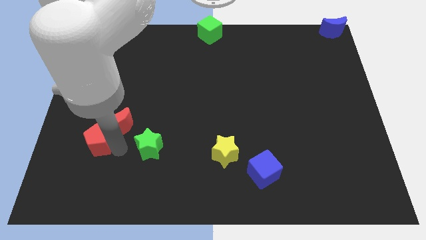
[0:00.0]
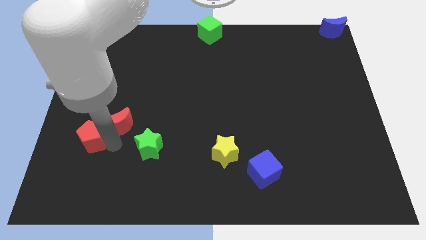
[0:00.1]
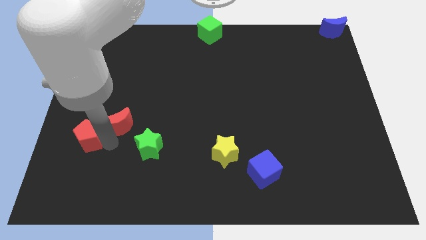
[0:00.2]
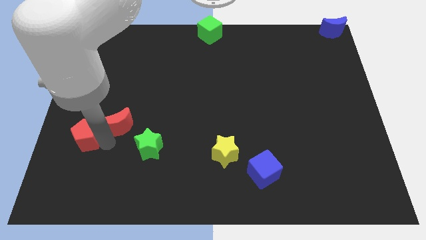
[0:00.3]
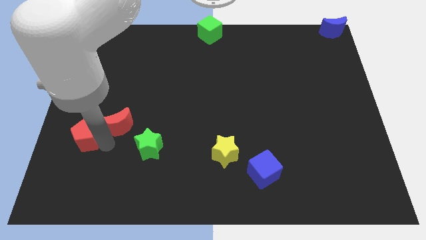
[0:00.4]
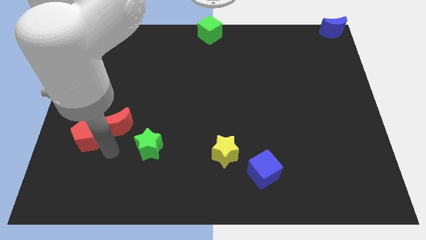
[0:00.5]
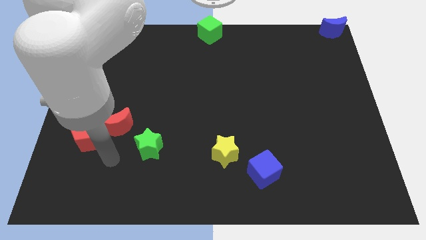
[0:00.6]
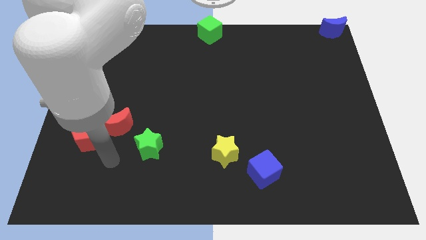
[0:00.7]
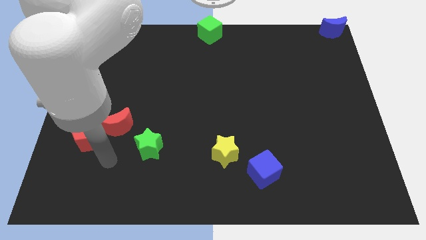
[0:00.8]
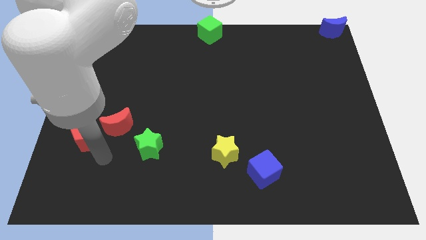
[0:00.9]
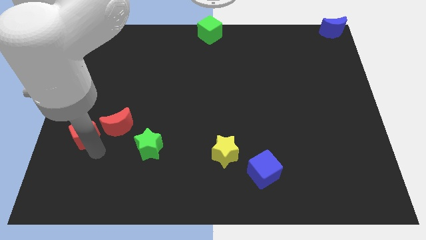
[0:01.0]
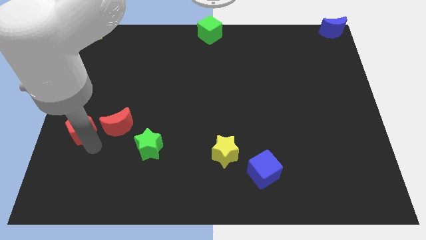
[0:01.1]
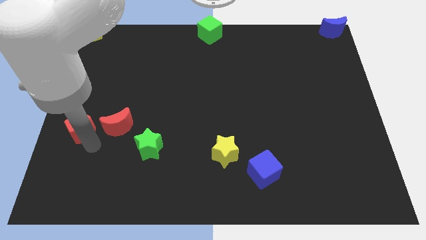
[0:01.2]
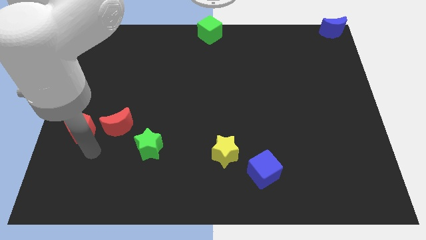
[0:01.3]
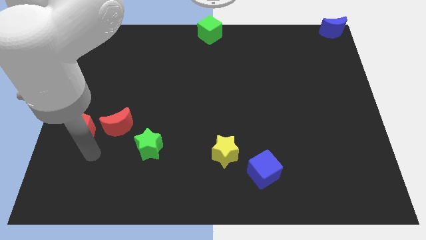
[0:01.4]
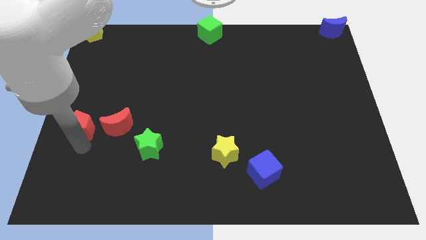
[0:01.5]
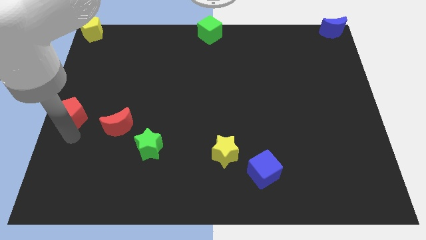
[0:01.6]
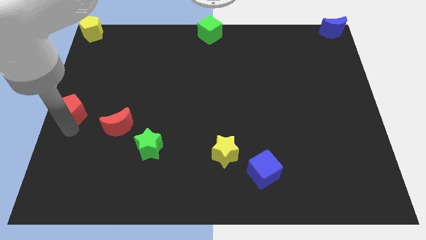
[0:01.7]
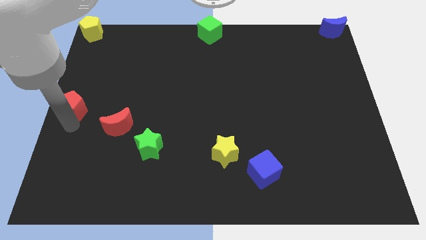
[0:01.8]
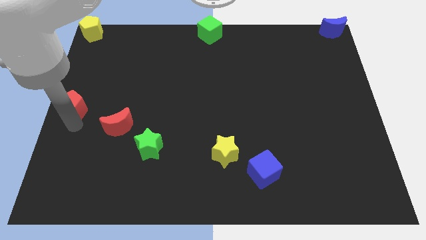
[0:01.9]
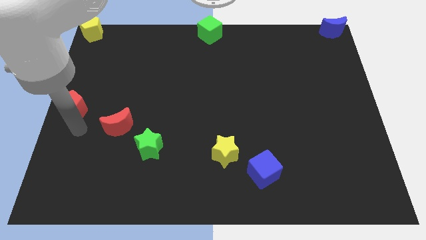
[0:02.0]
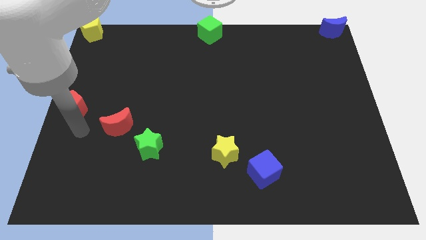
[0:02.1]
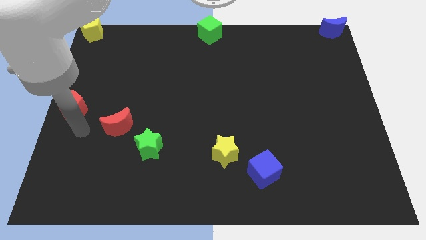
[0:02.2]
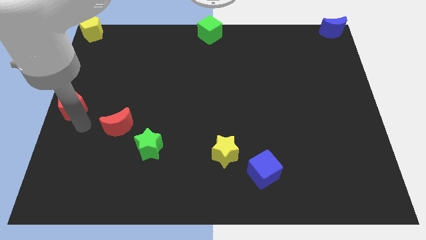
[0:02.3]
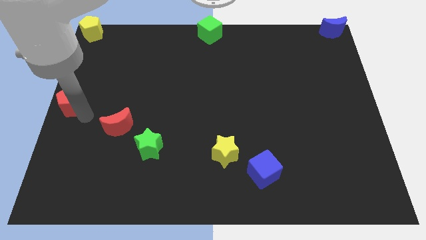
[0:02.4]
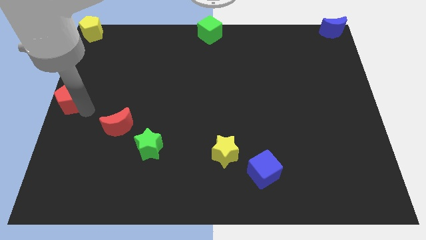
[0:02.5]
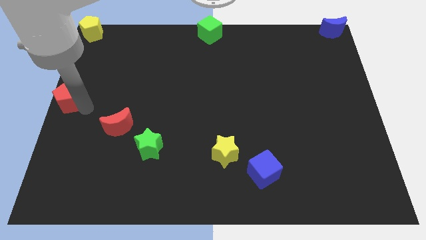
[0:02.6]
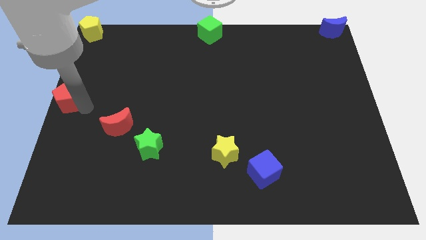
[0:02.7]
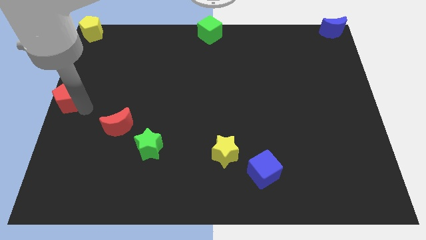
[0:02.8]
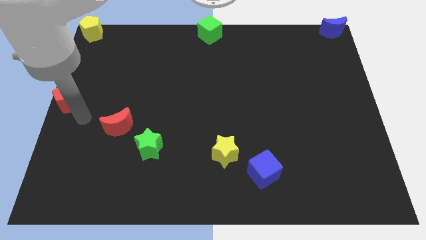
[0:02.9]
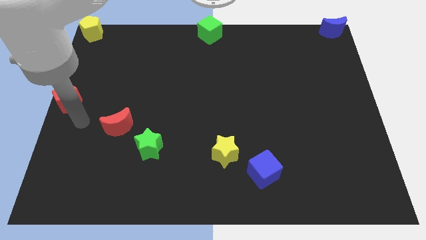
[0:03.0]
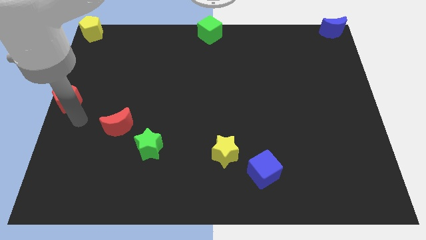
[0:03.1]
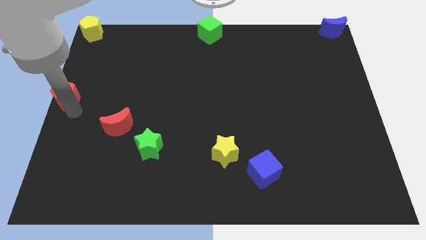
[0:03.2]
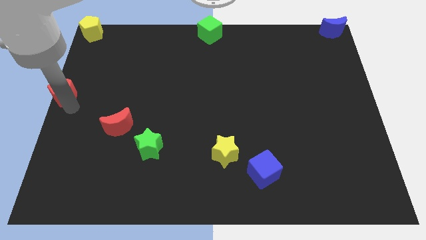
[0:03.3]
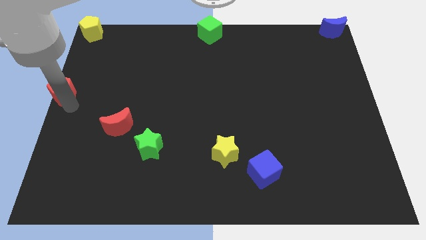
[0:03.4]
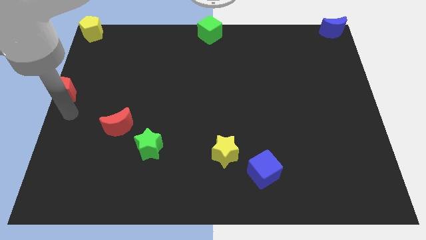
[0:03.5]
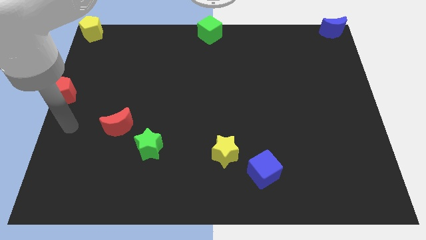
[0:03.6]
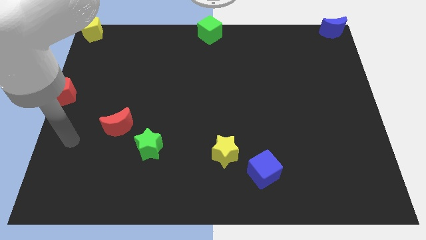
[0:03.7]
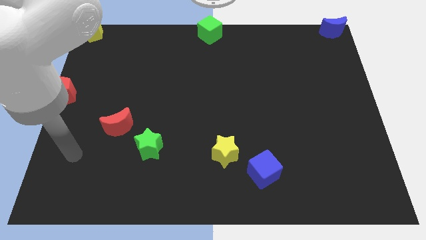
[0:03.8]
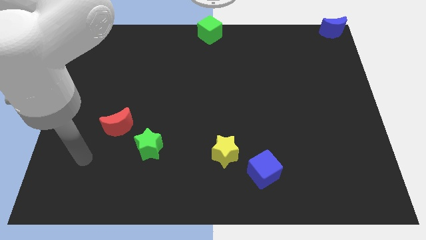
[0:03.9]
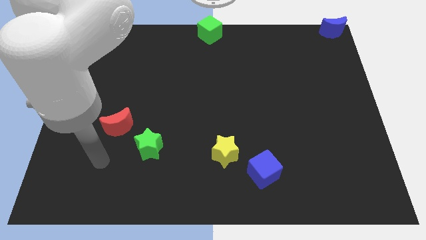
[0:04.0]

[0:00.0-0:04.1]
put the red pentagon at the center left corner

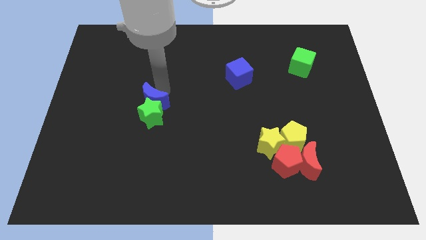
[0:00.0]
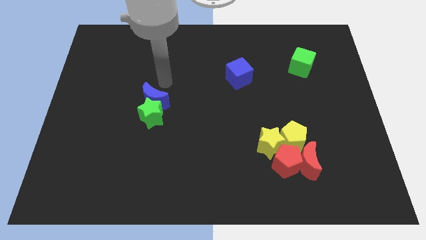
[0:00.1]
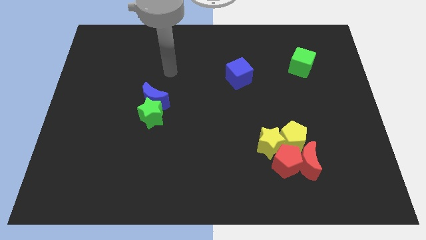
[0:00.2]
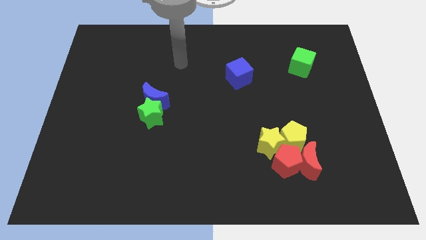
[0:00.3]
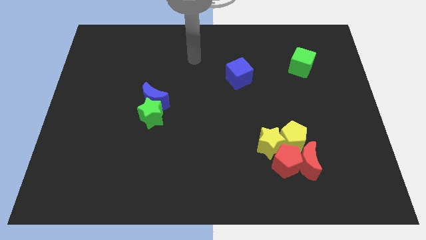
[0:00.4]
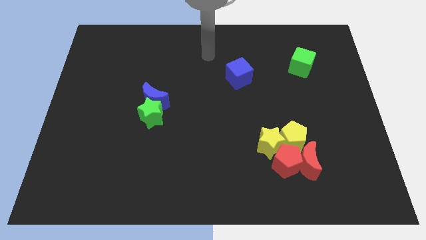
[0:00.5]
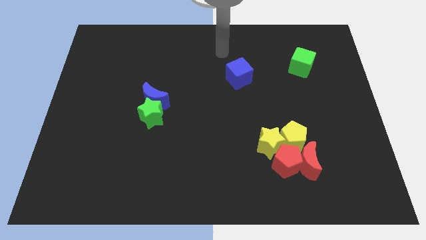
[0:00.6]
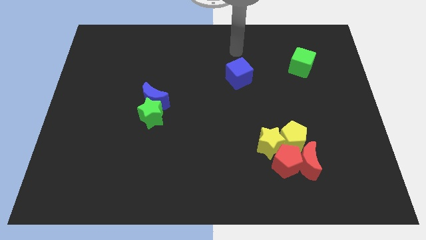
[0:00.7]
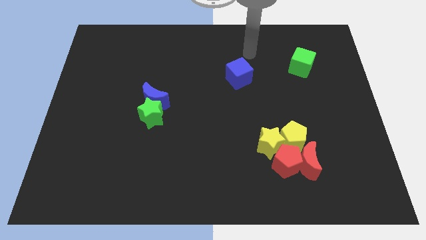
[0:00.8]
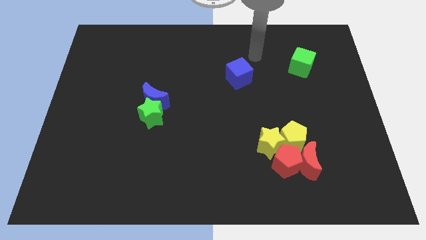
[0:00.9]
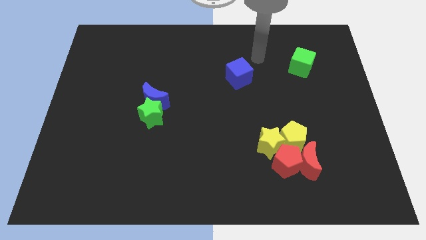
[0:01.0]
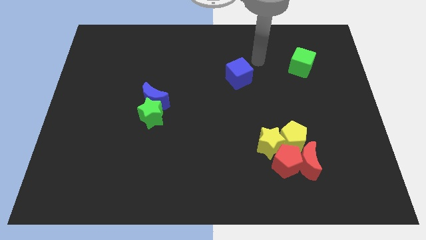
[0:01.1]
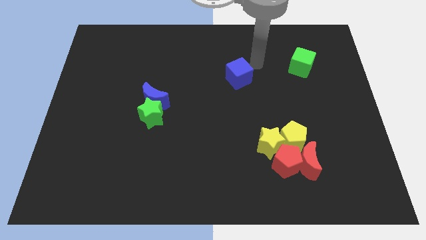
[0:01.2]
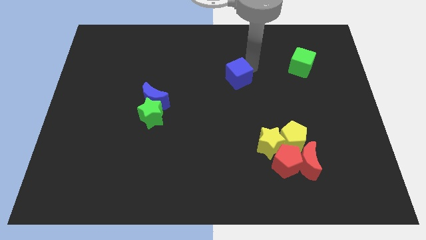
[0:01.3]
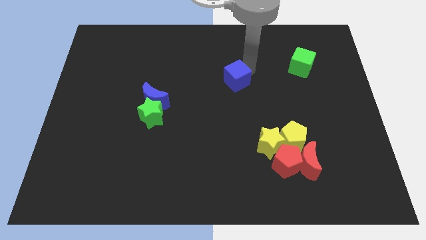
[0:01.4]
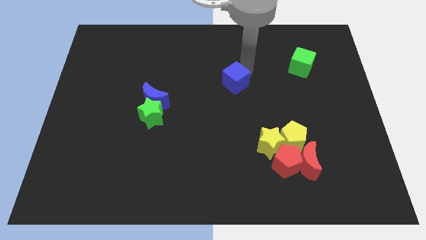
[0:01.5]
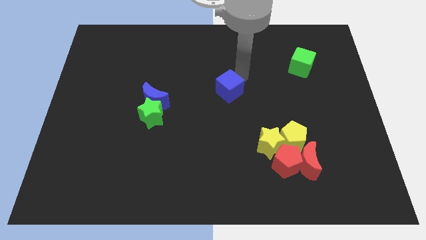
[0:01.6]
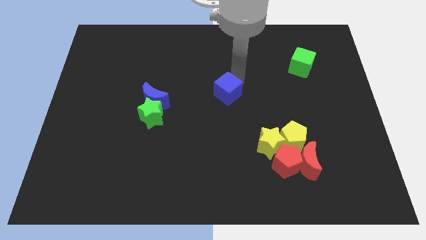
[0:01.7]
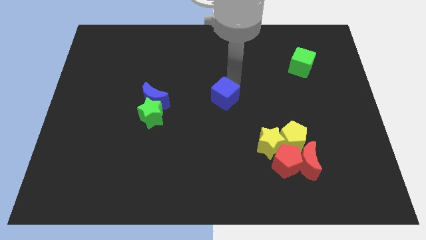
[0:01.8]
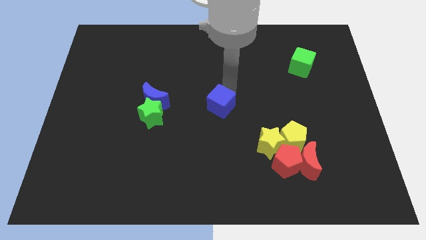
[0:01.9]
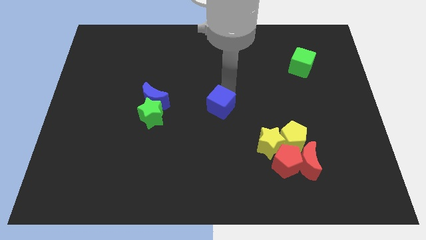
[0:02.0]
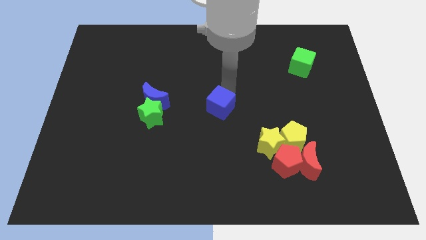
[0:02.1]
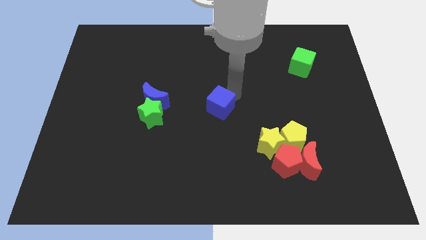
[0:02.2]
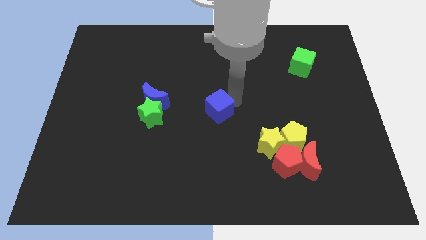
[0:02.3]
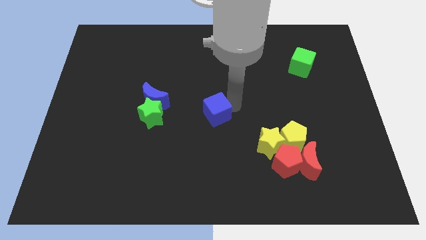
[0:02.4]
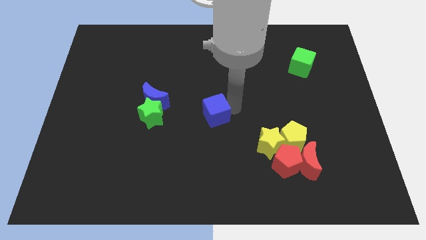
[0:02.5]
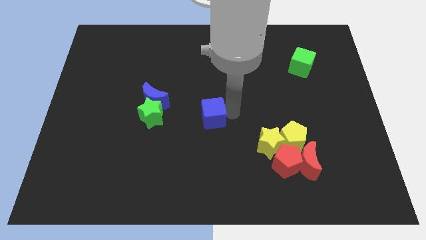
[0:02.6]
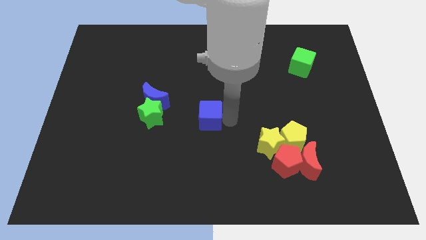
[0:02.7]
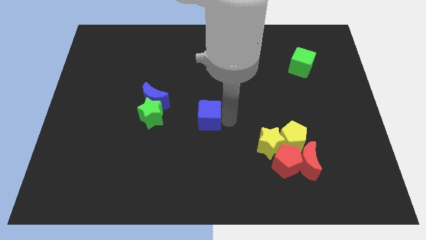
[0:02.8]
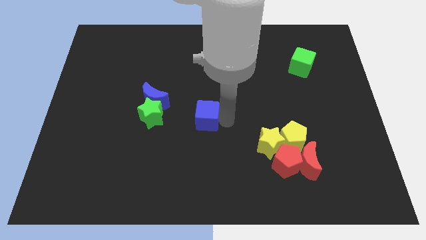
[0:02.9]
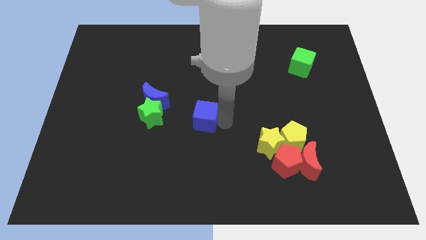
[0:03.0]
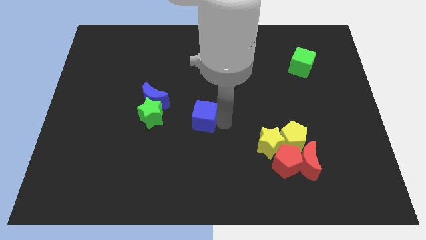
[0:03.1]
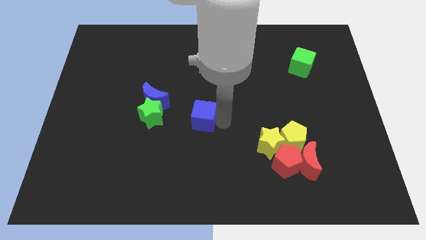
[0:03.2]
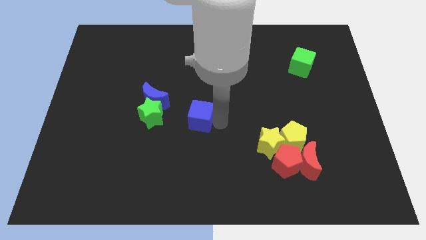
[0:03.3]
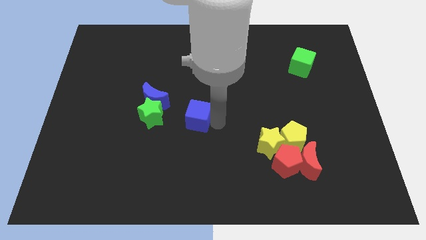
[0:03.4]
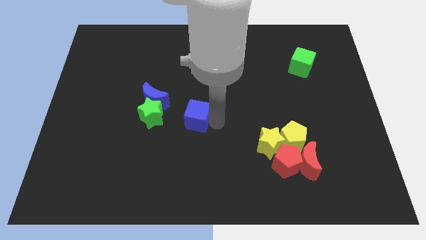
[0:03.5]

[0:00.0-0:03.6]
place the blue cube at the right of the green star

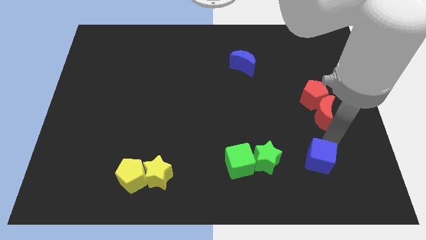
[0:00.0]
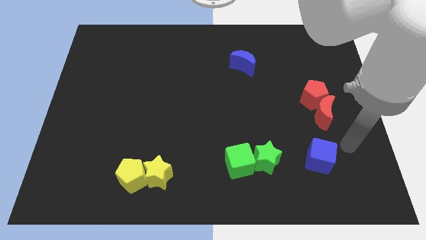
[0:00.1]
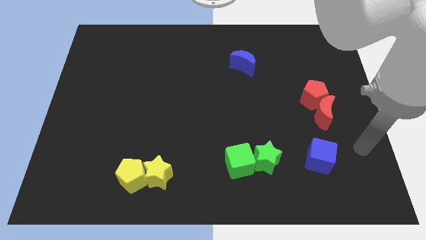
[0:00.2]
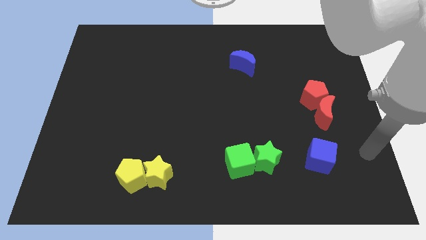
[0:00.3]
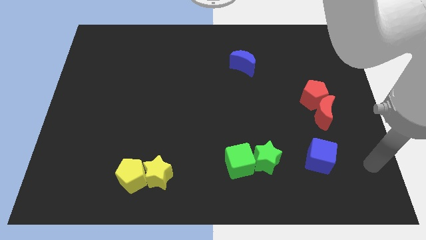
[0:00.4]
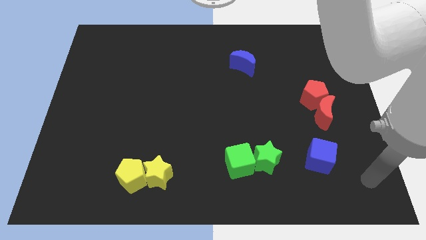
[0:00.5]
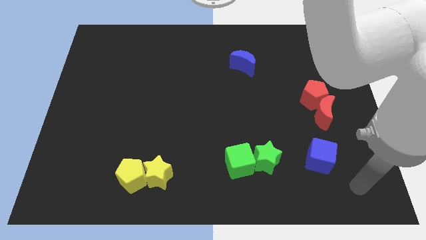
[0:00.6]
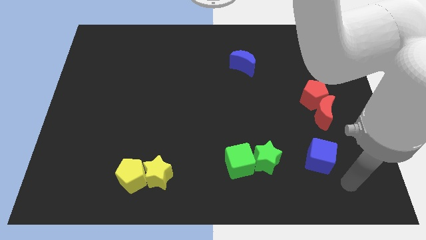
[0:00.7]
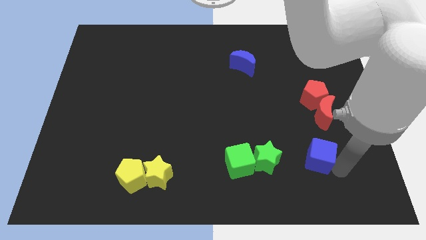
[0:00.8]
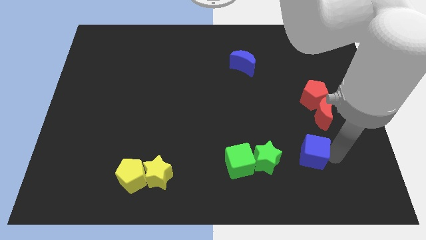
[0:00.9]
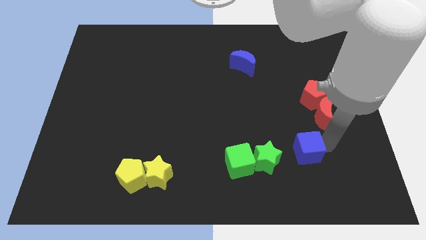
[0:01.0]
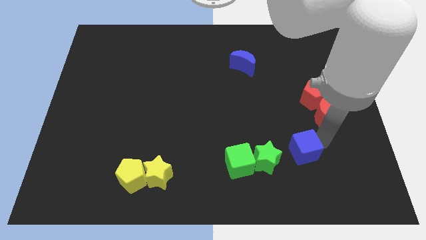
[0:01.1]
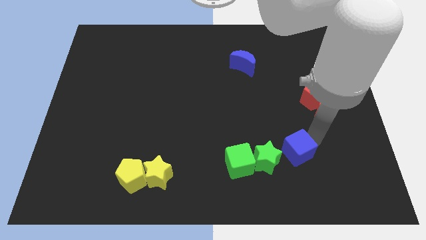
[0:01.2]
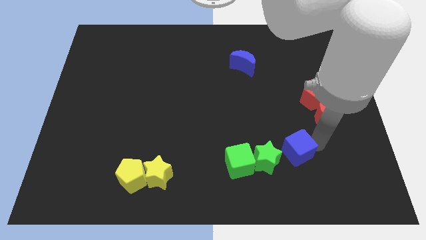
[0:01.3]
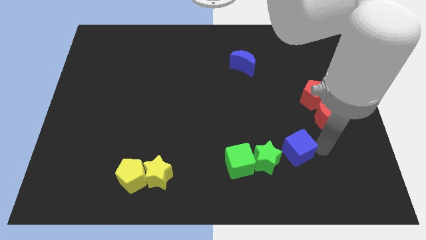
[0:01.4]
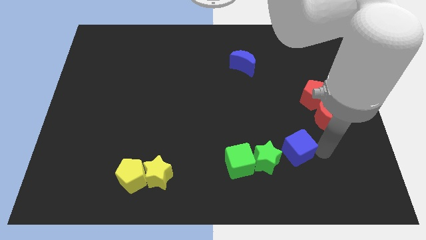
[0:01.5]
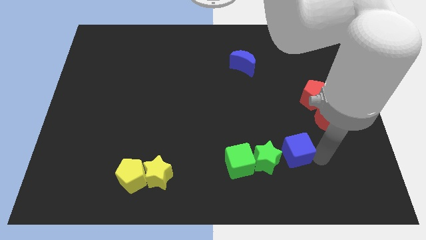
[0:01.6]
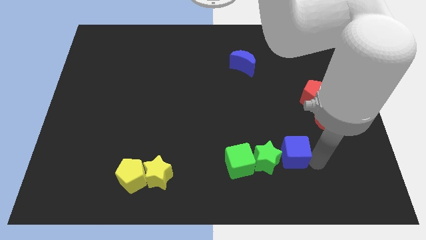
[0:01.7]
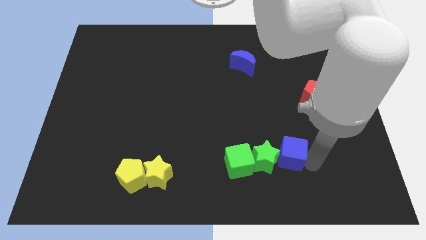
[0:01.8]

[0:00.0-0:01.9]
move the blue cube towards the right side of the green star
